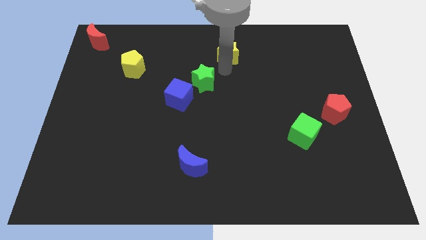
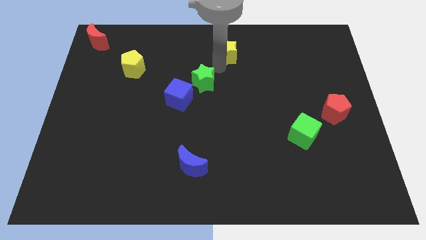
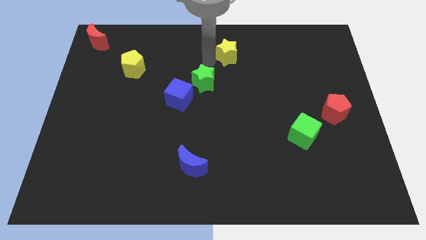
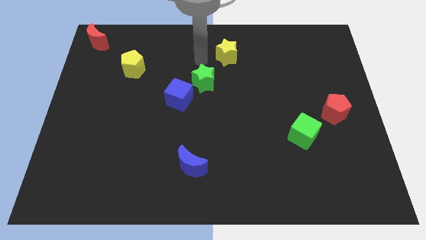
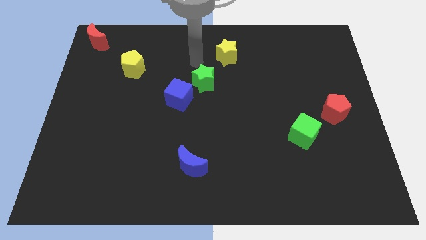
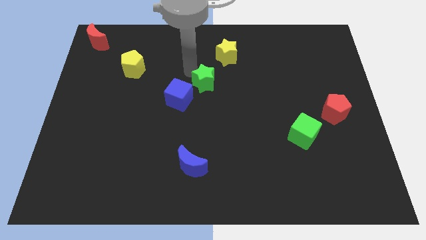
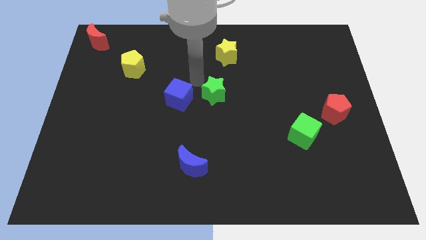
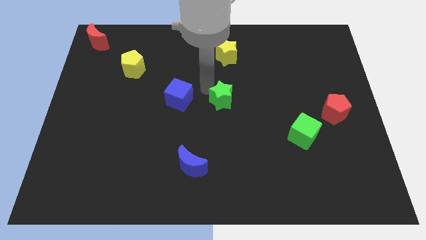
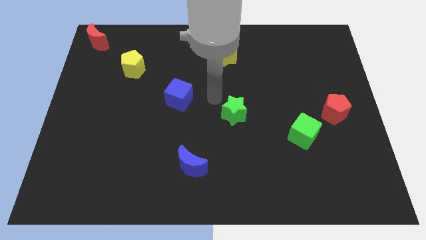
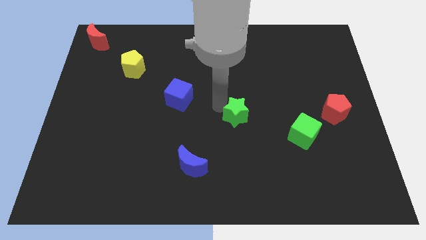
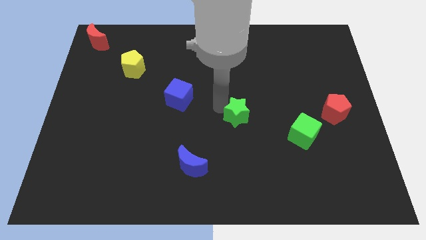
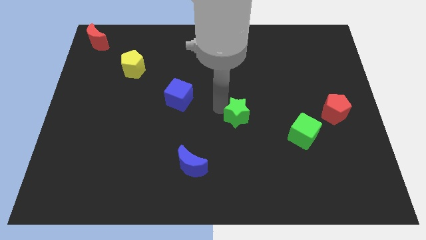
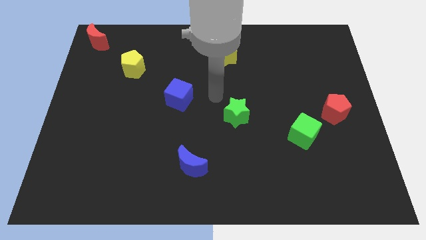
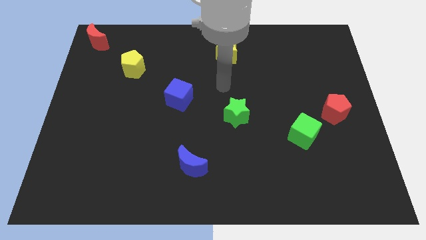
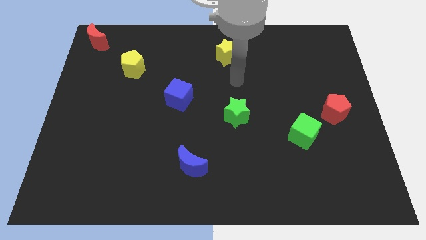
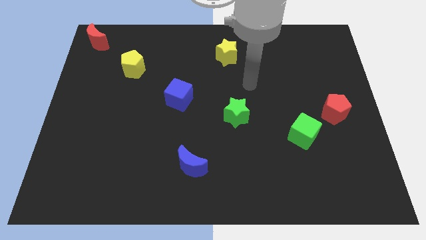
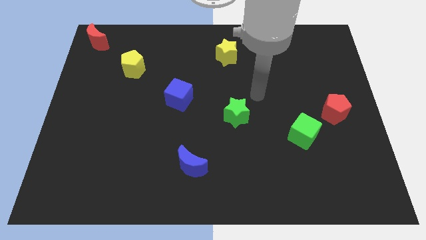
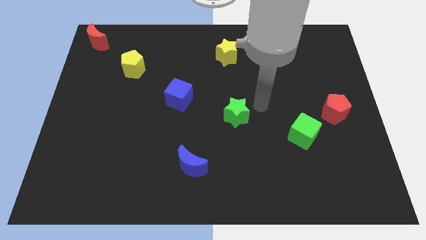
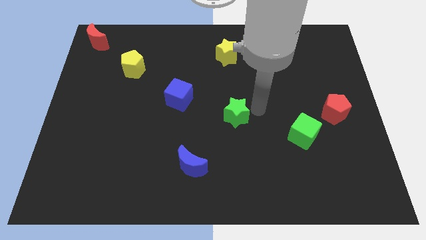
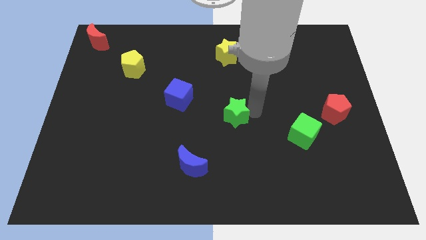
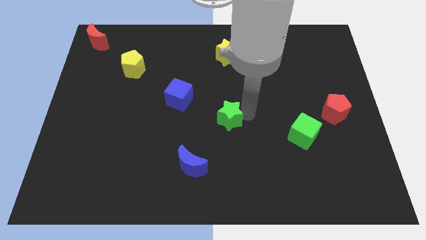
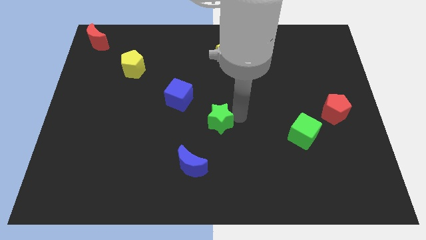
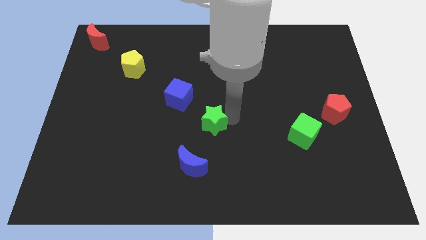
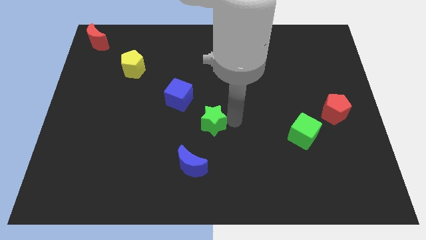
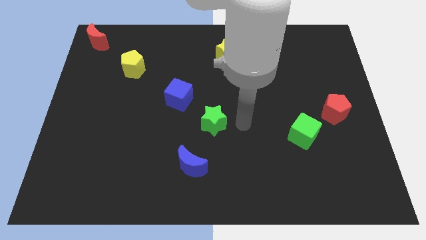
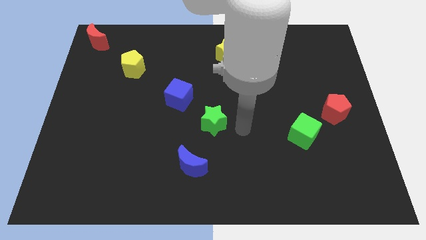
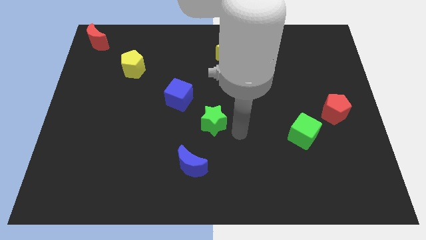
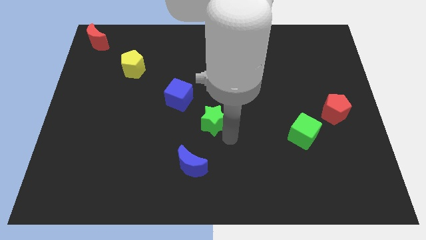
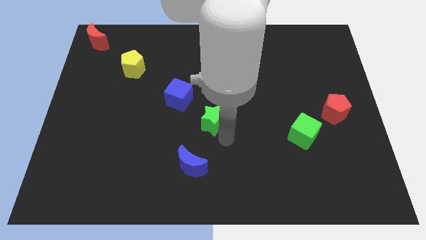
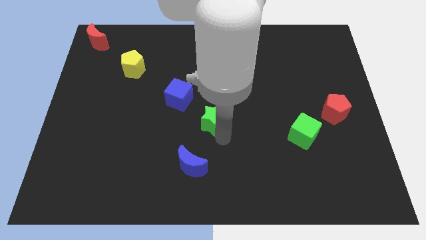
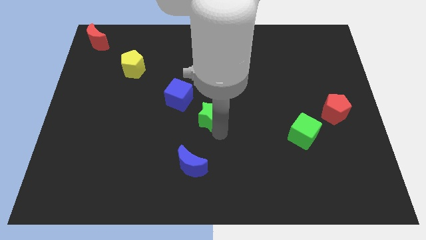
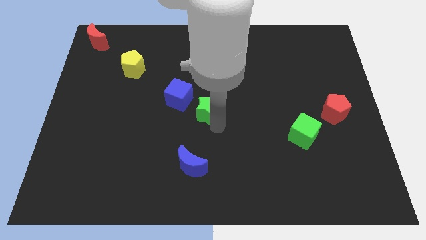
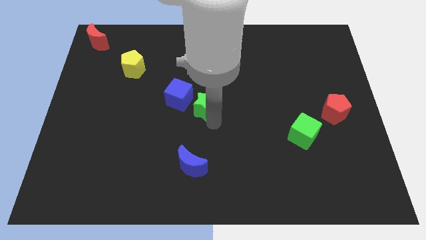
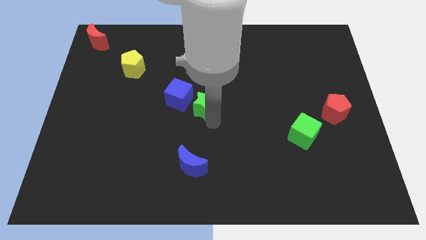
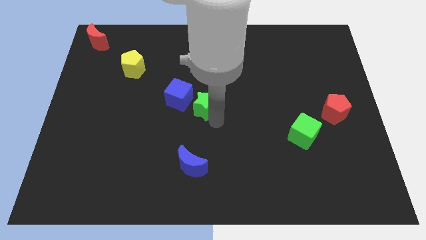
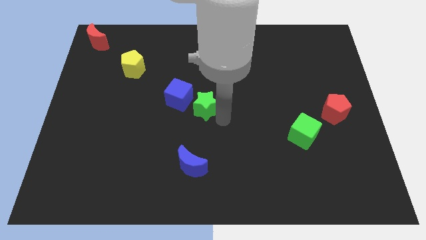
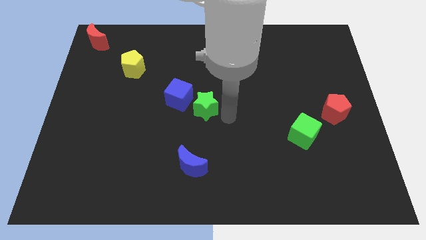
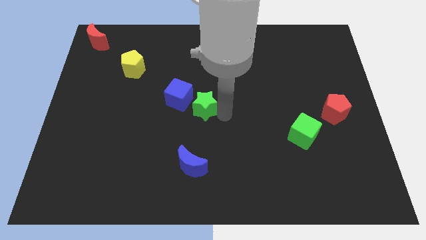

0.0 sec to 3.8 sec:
slide the green star below the blue cube

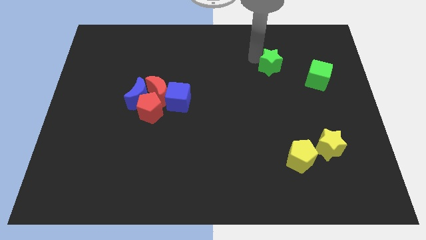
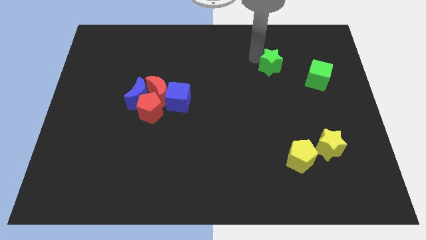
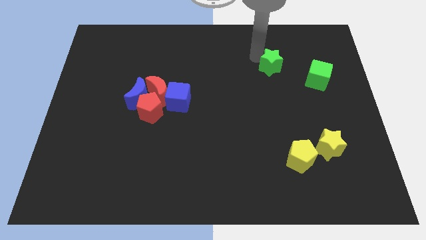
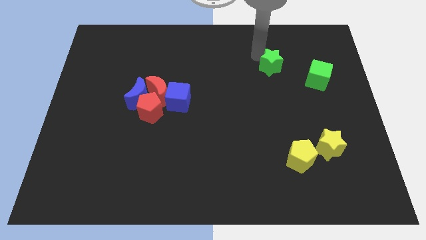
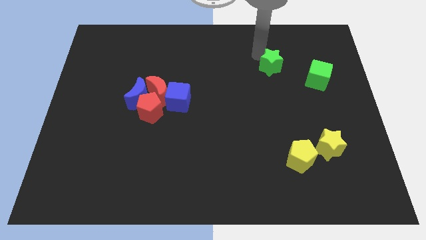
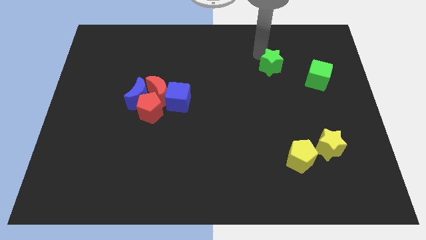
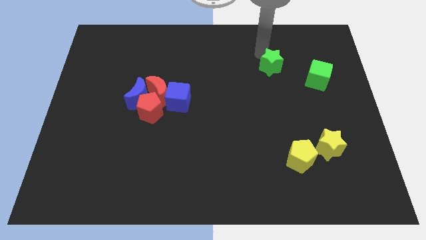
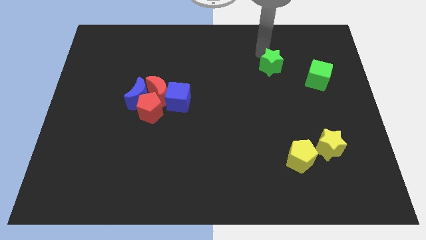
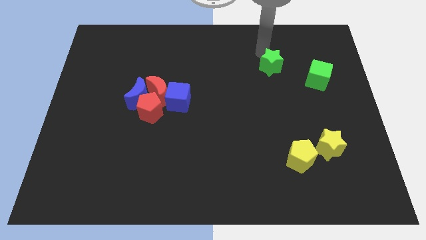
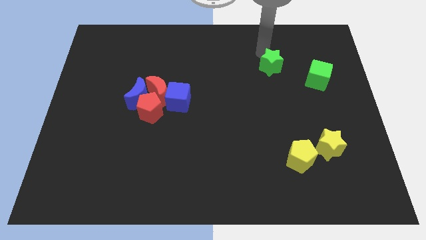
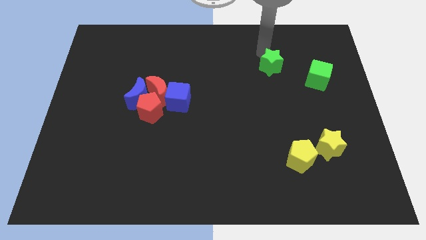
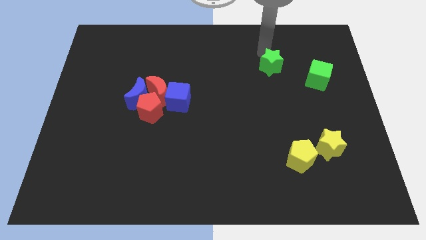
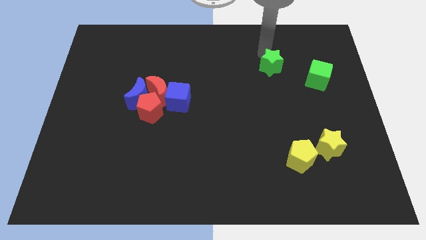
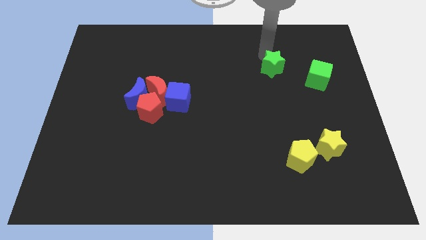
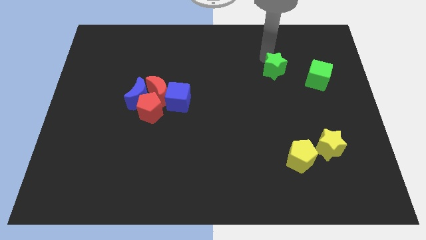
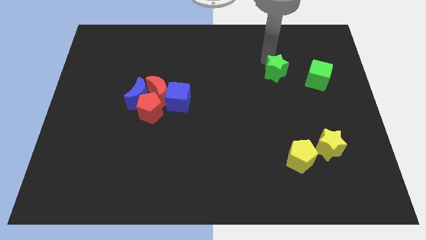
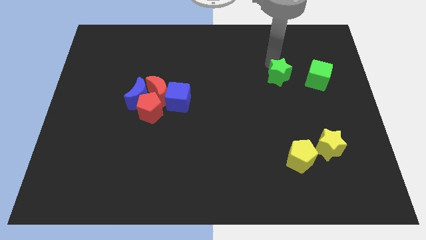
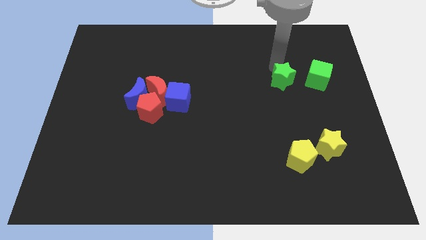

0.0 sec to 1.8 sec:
push green star beside green cube

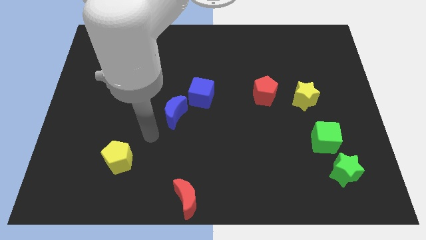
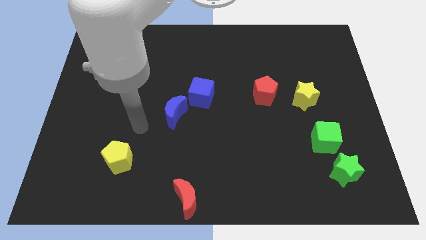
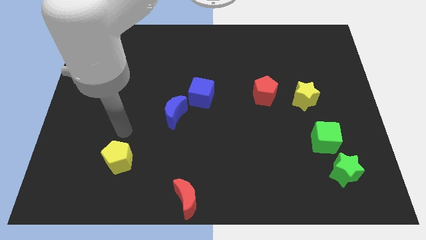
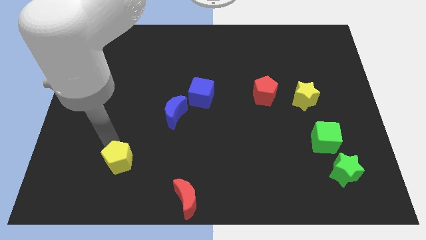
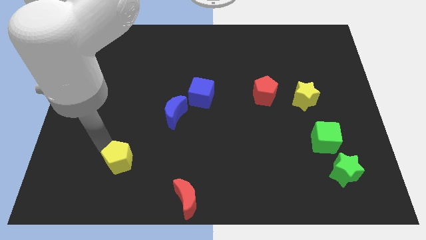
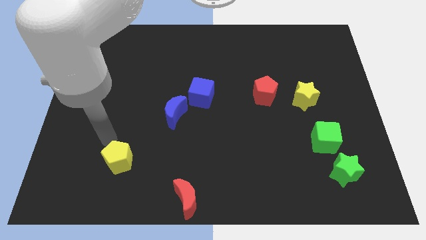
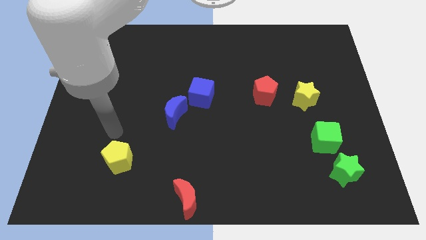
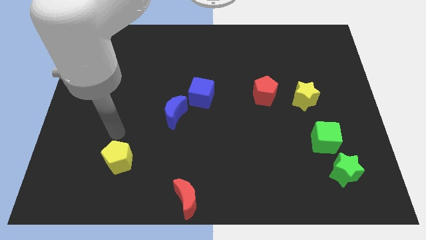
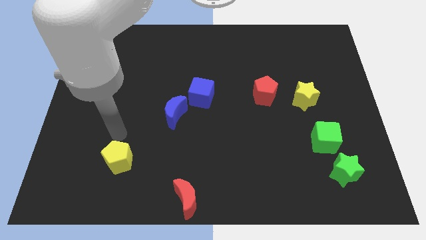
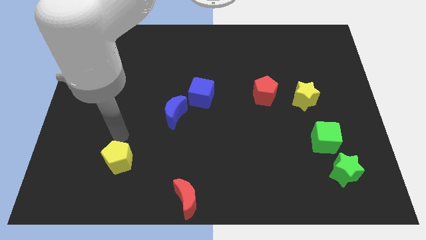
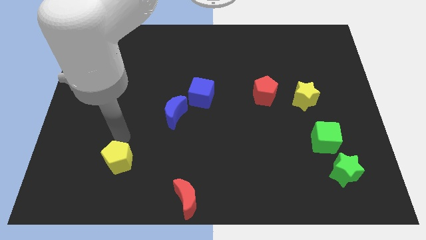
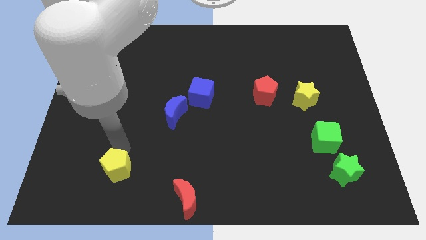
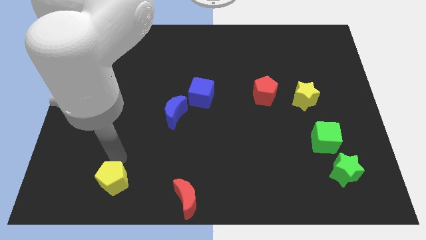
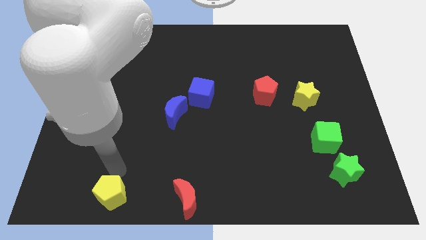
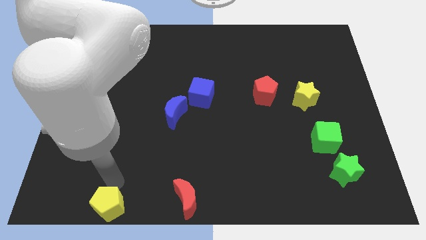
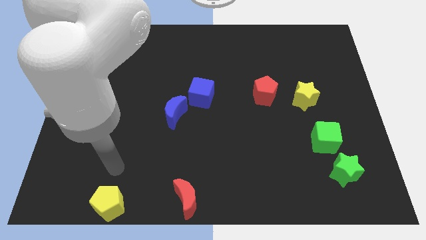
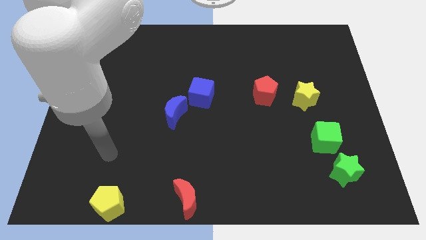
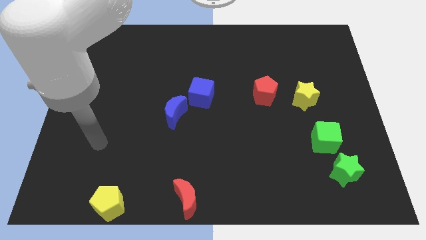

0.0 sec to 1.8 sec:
put the yellow pentagon horizontally left to the red moon

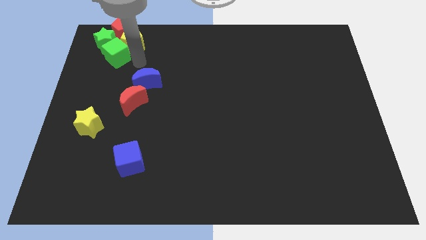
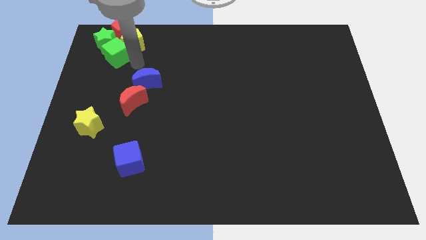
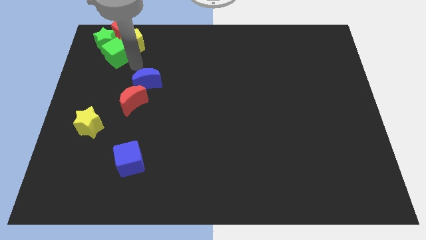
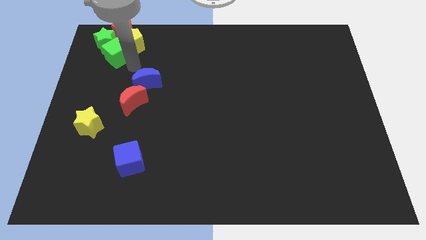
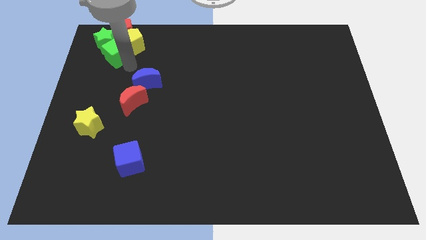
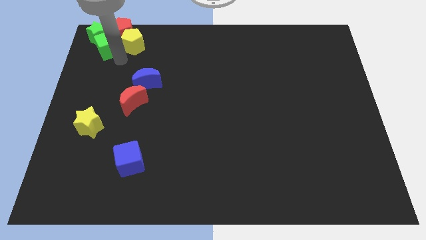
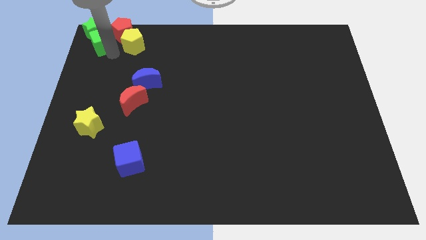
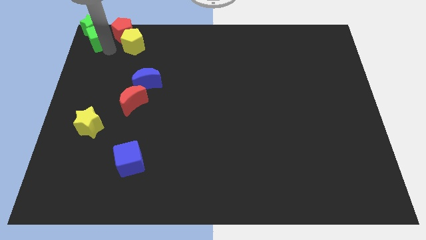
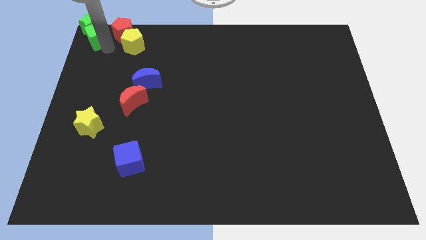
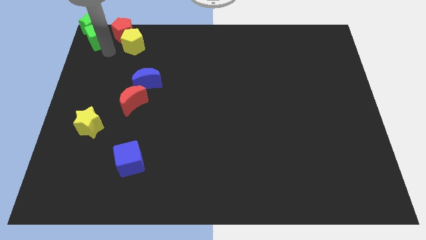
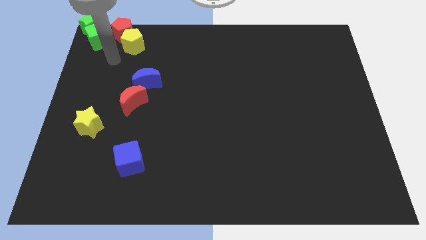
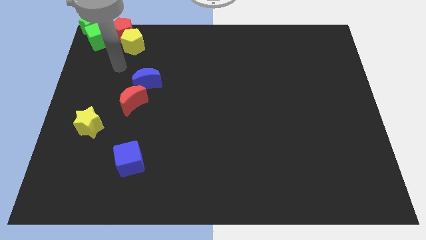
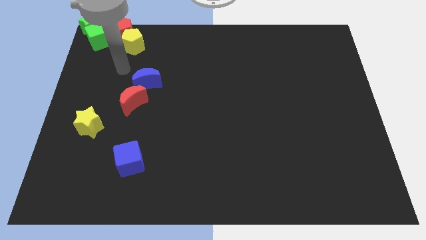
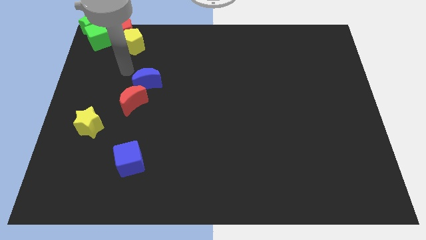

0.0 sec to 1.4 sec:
place the green blocks at the top left corner
